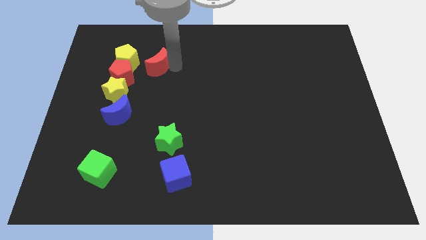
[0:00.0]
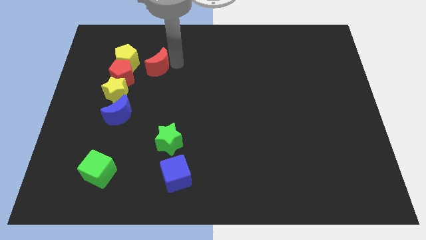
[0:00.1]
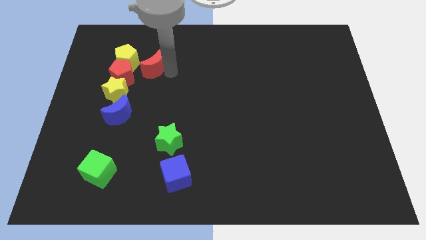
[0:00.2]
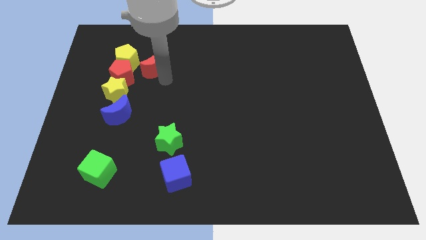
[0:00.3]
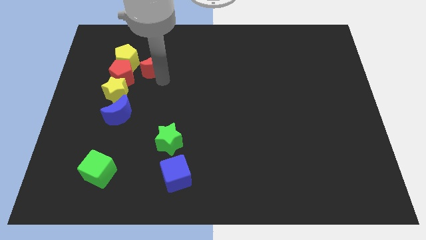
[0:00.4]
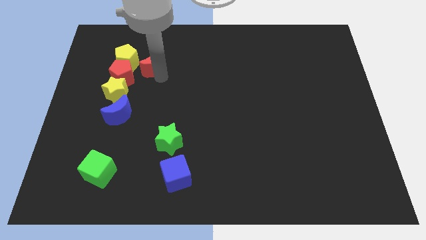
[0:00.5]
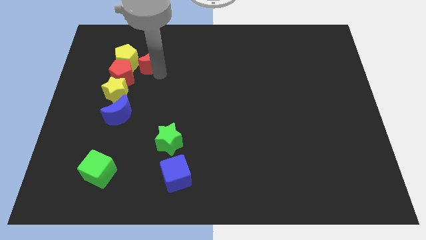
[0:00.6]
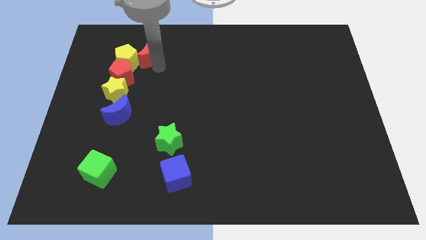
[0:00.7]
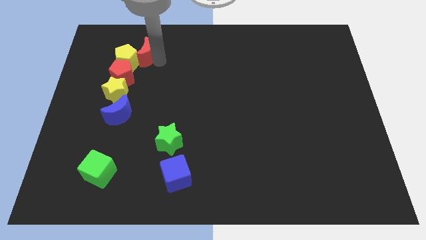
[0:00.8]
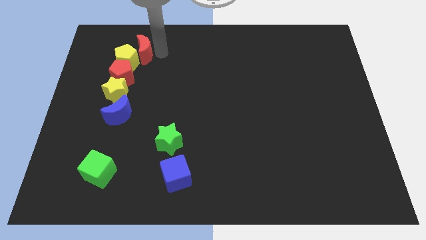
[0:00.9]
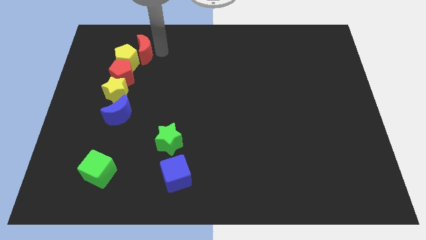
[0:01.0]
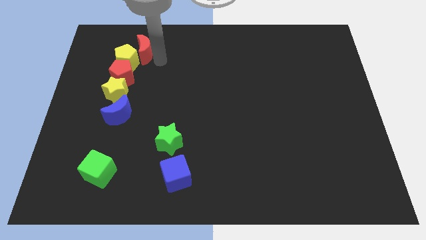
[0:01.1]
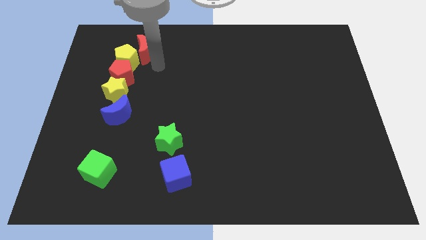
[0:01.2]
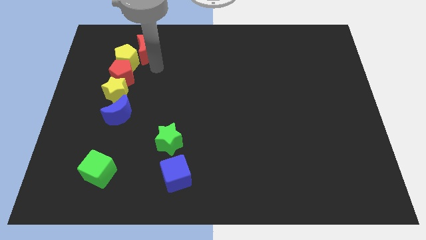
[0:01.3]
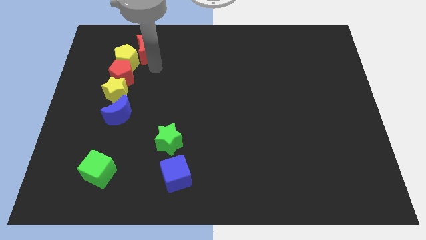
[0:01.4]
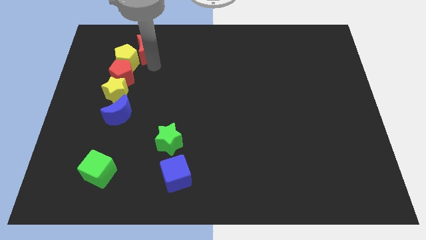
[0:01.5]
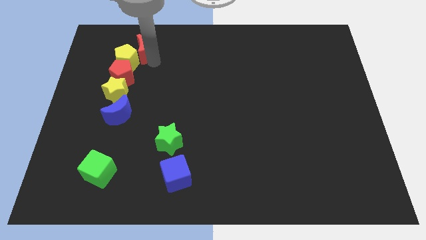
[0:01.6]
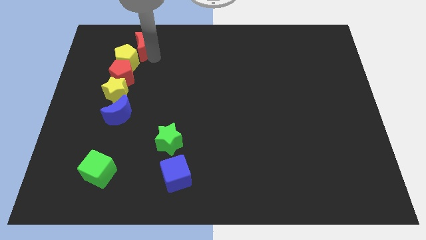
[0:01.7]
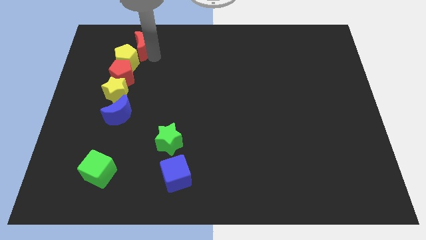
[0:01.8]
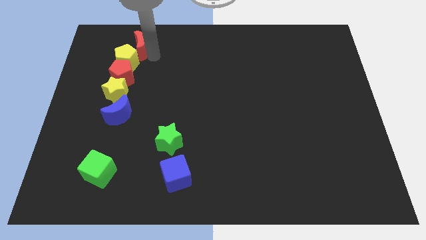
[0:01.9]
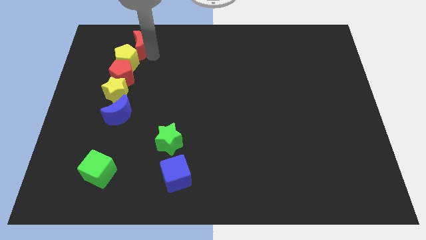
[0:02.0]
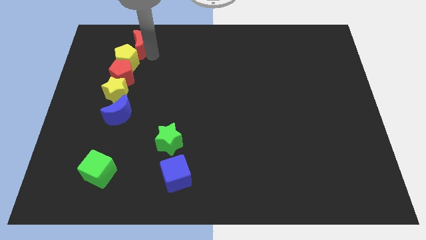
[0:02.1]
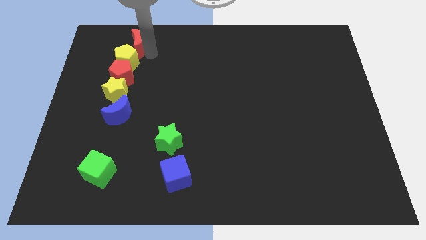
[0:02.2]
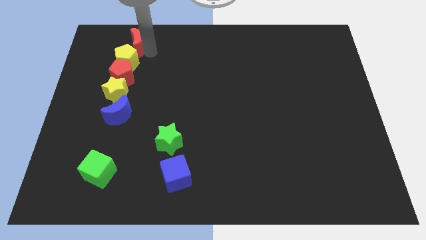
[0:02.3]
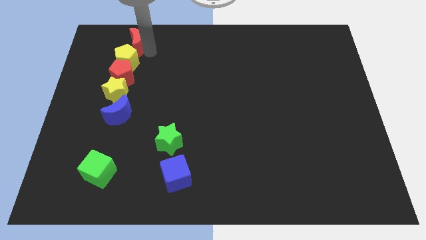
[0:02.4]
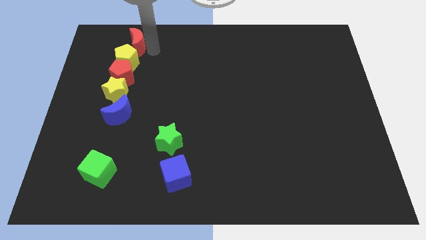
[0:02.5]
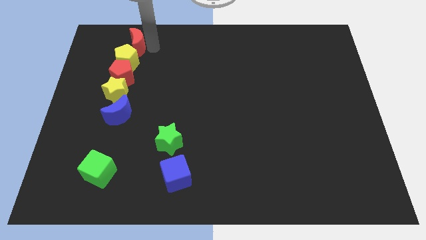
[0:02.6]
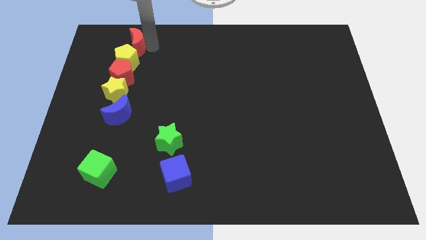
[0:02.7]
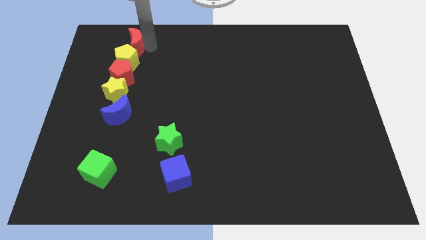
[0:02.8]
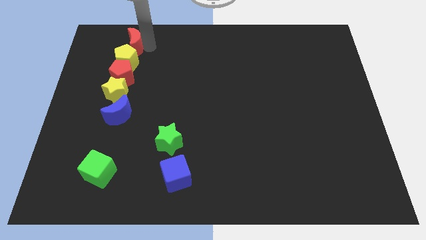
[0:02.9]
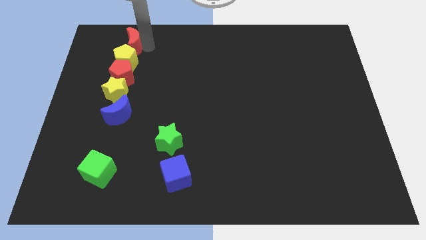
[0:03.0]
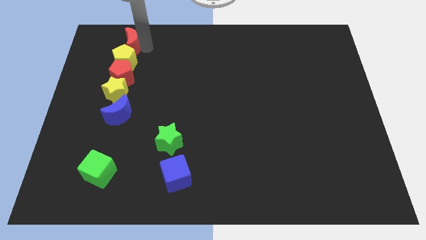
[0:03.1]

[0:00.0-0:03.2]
push the red crescent to the top of yellow pentagon

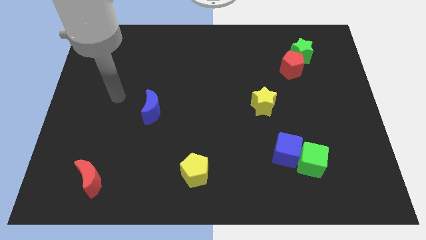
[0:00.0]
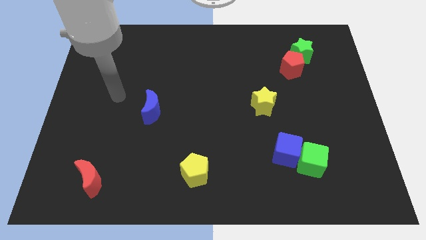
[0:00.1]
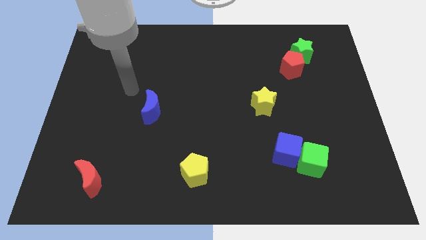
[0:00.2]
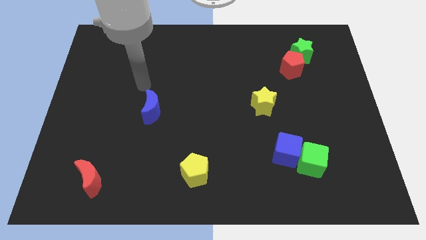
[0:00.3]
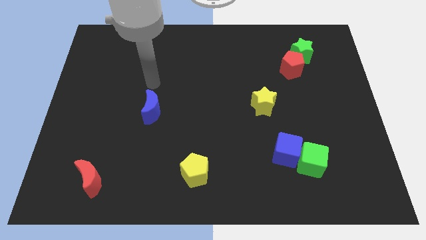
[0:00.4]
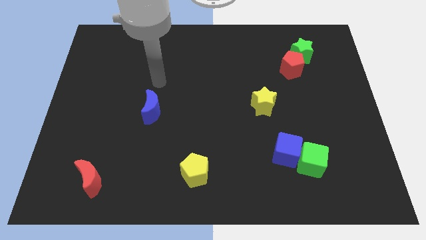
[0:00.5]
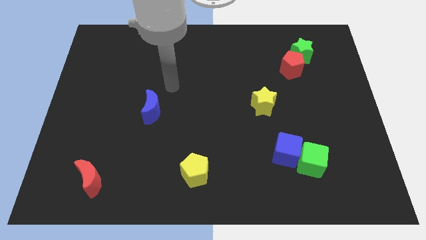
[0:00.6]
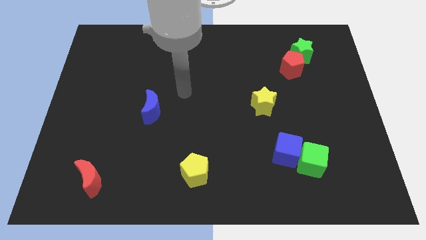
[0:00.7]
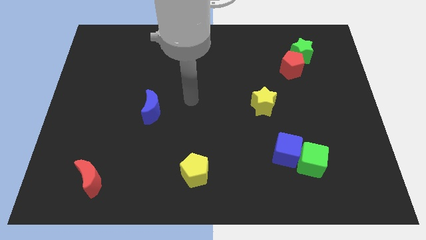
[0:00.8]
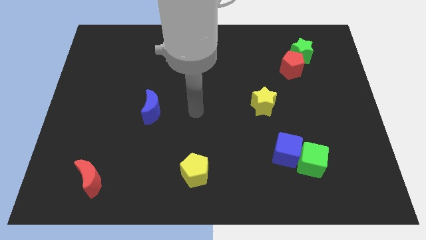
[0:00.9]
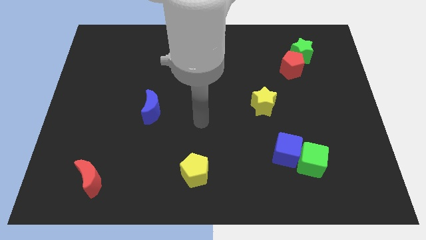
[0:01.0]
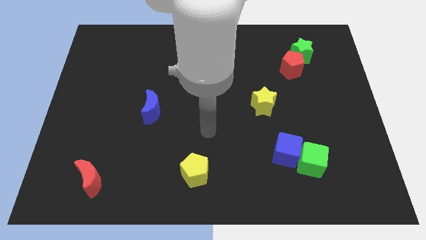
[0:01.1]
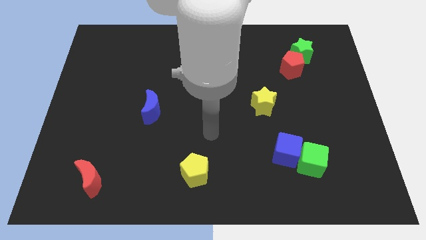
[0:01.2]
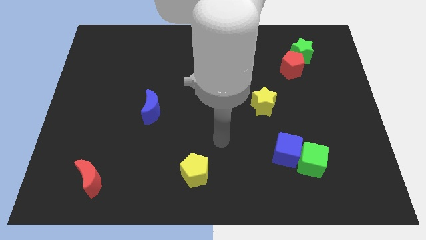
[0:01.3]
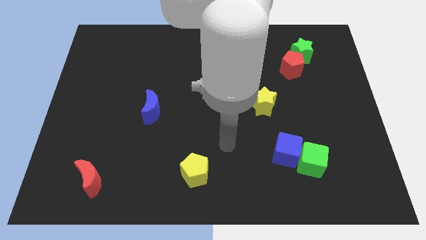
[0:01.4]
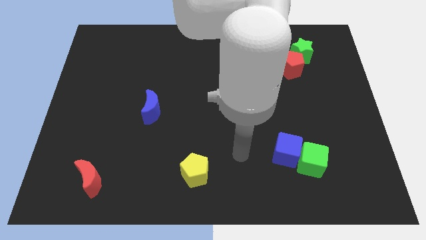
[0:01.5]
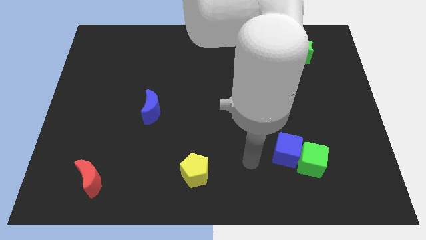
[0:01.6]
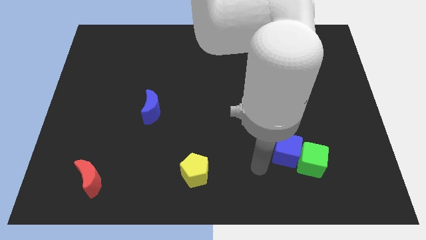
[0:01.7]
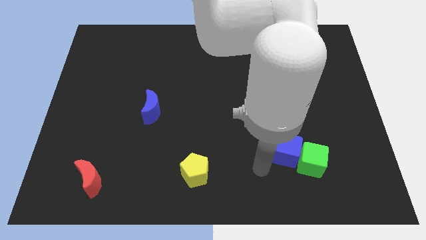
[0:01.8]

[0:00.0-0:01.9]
move your arm towards the blue cube

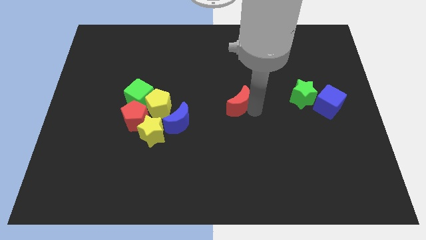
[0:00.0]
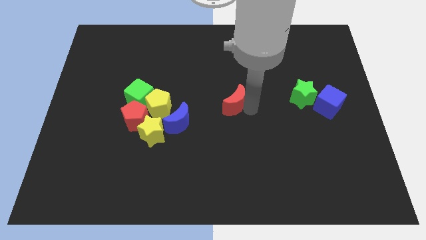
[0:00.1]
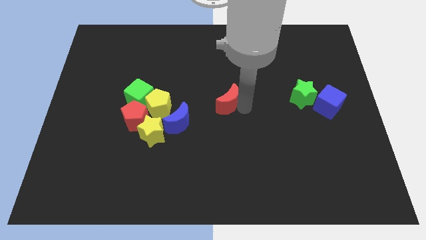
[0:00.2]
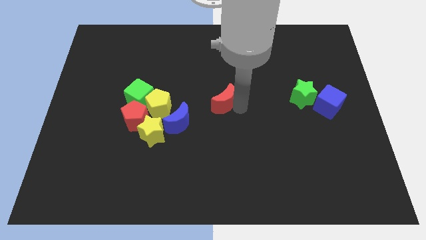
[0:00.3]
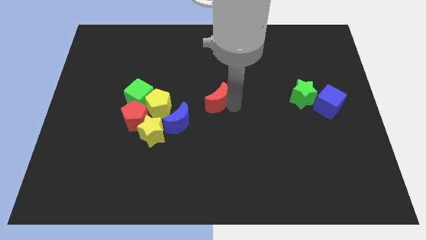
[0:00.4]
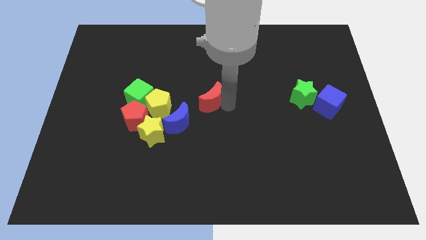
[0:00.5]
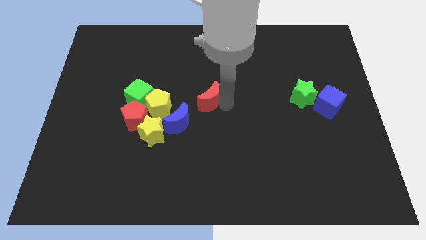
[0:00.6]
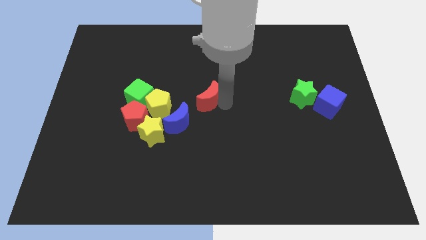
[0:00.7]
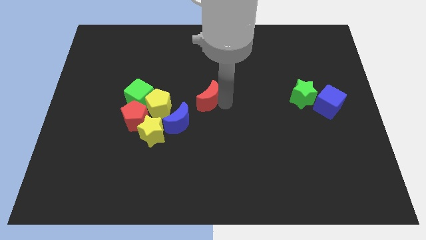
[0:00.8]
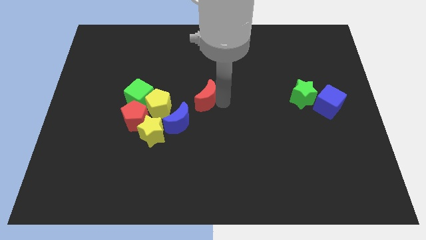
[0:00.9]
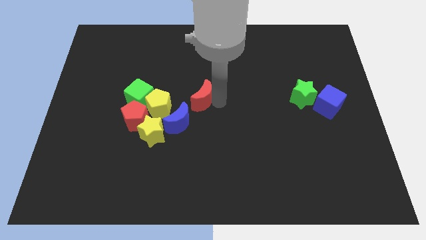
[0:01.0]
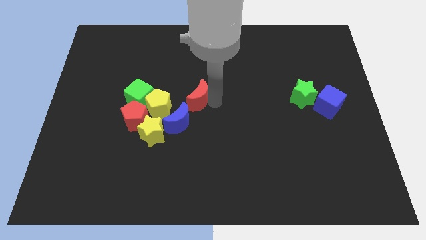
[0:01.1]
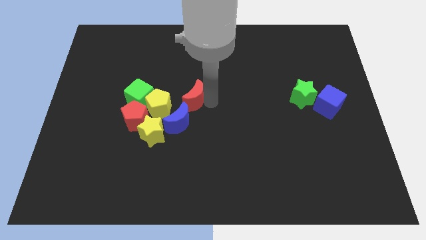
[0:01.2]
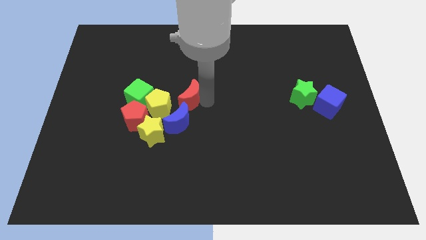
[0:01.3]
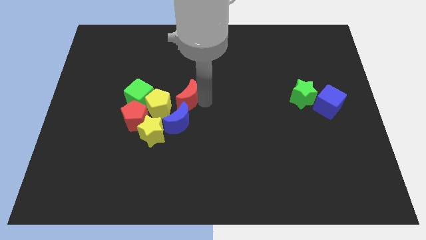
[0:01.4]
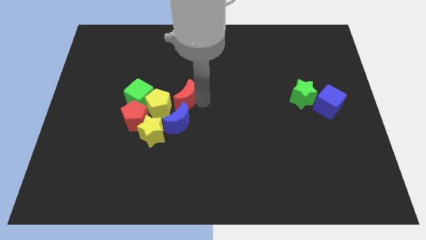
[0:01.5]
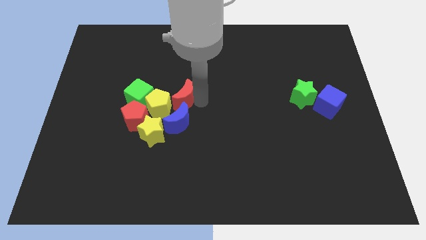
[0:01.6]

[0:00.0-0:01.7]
move the red crescent close to the yellow pentagon

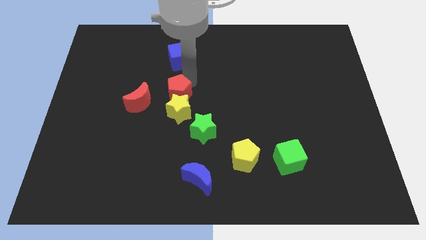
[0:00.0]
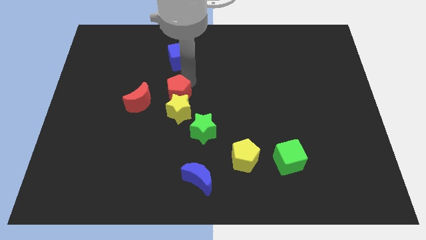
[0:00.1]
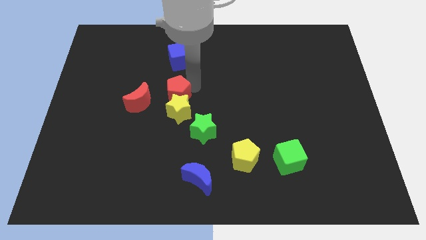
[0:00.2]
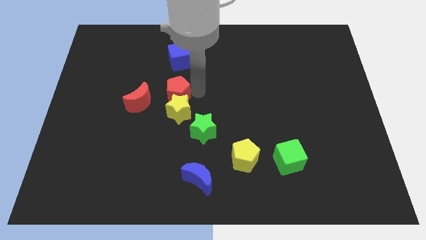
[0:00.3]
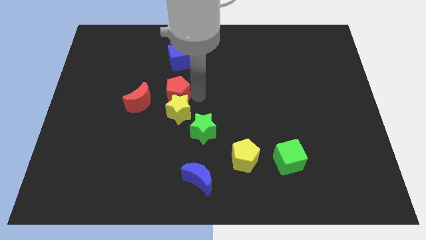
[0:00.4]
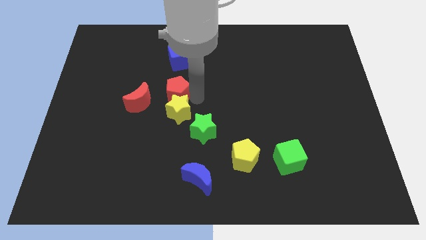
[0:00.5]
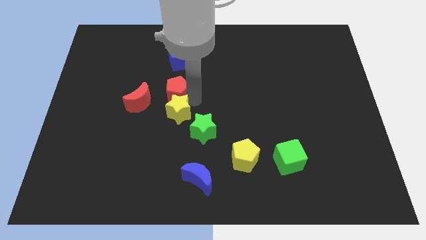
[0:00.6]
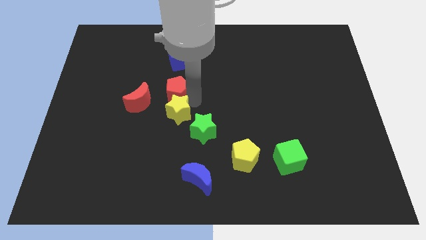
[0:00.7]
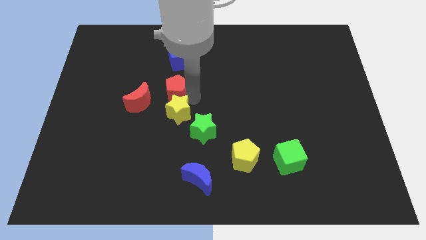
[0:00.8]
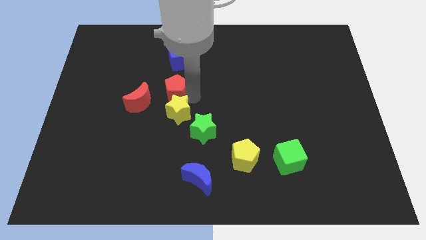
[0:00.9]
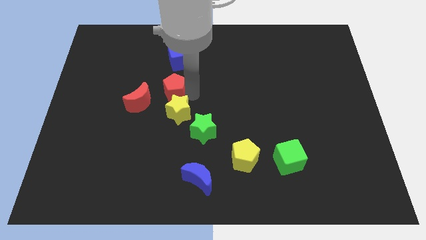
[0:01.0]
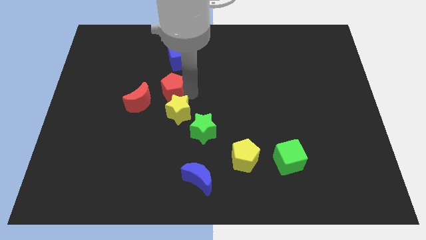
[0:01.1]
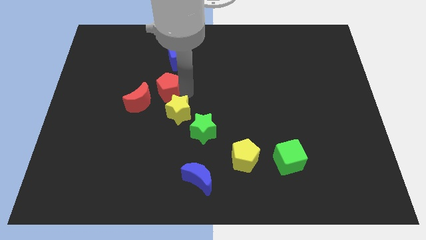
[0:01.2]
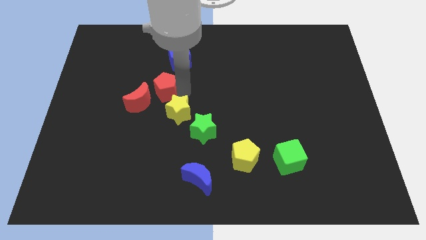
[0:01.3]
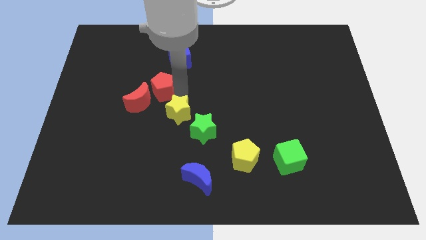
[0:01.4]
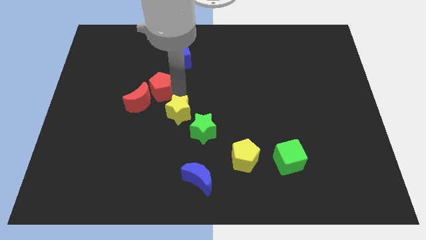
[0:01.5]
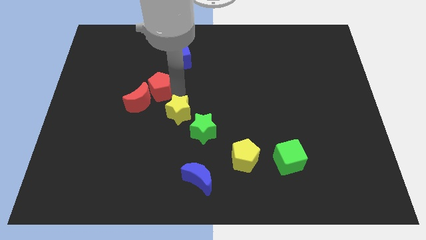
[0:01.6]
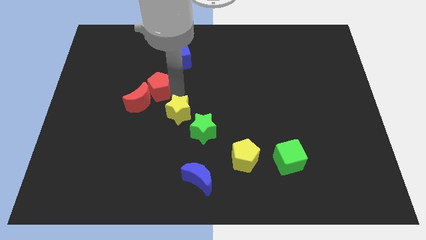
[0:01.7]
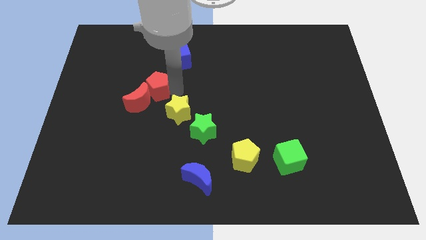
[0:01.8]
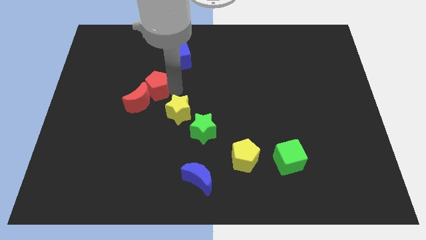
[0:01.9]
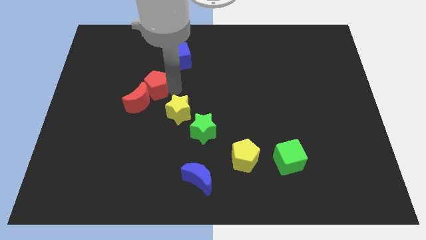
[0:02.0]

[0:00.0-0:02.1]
move the red pentagon into the top side of the red crescent
